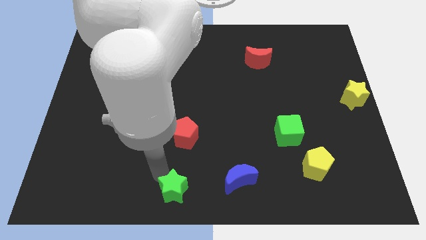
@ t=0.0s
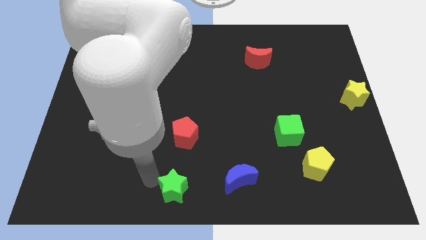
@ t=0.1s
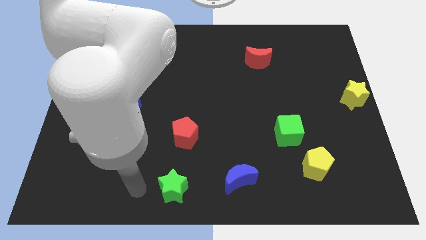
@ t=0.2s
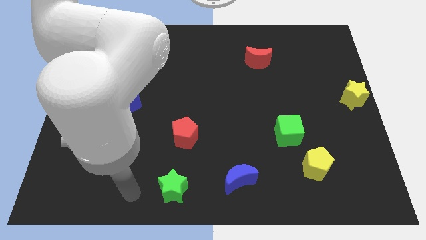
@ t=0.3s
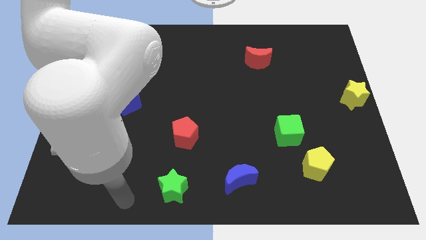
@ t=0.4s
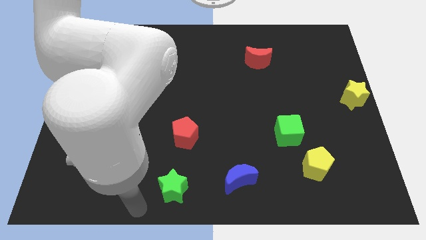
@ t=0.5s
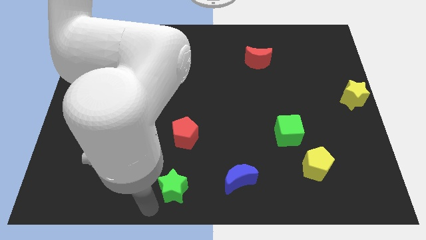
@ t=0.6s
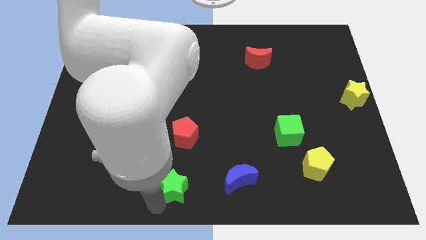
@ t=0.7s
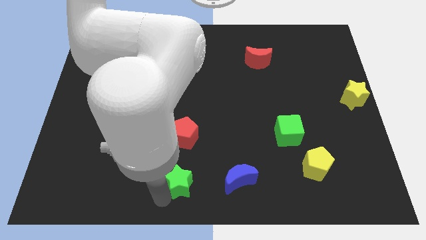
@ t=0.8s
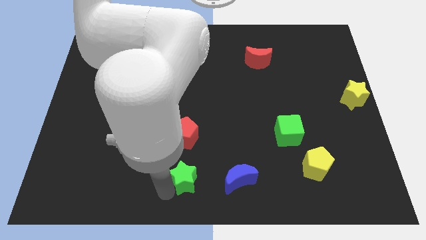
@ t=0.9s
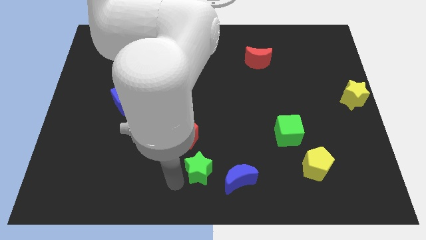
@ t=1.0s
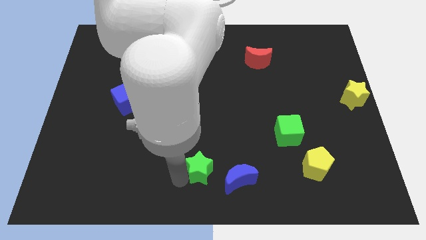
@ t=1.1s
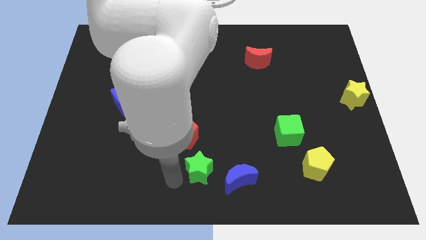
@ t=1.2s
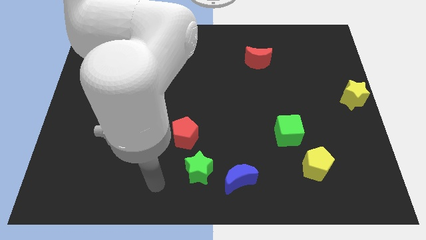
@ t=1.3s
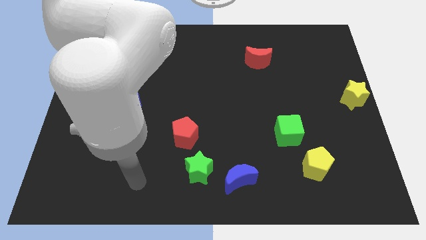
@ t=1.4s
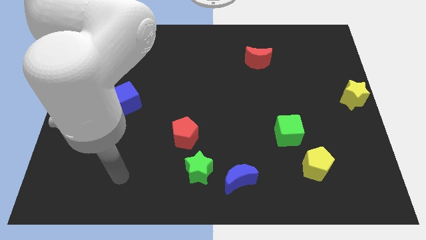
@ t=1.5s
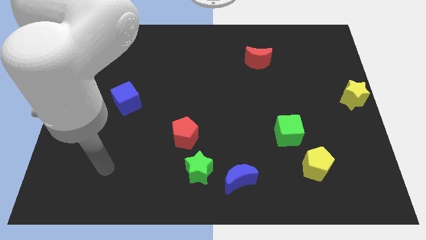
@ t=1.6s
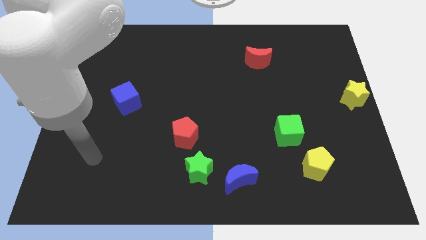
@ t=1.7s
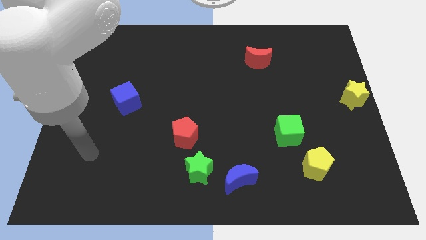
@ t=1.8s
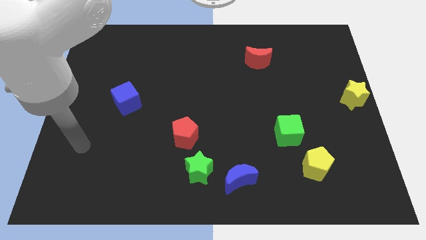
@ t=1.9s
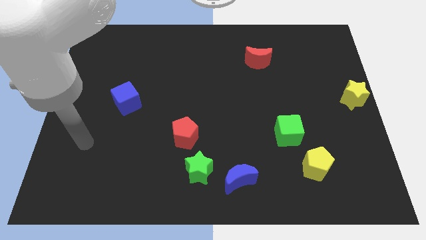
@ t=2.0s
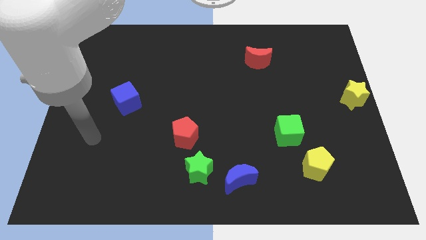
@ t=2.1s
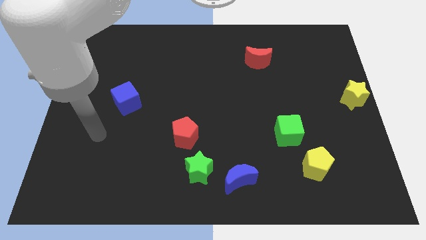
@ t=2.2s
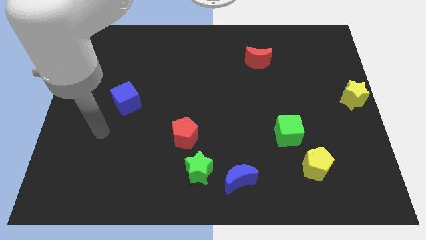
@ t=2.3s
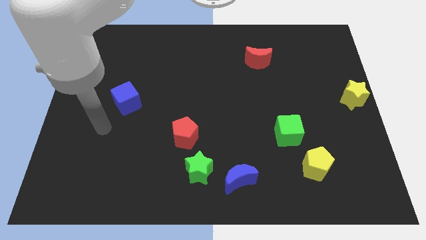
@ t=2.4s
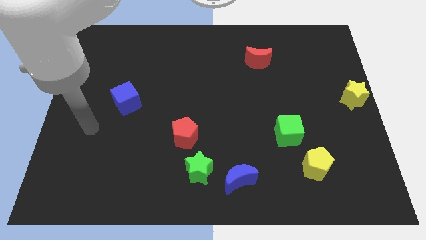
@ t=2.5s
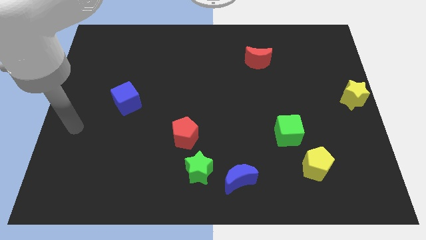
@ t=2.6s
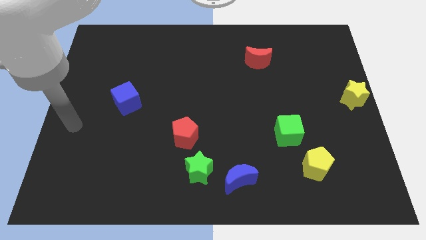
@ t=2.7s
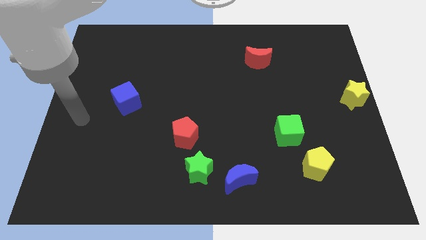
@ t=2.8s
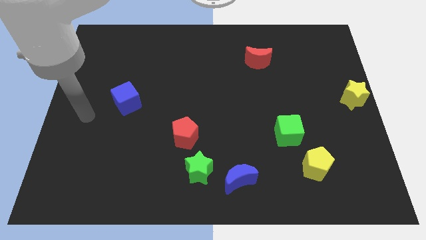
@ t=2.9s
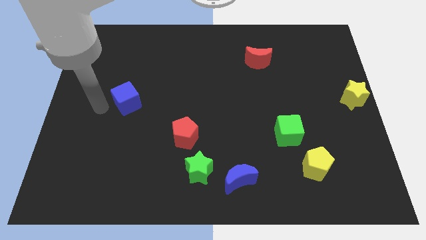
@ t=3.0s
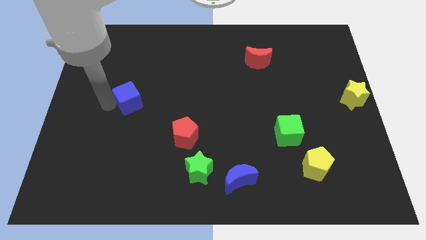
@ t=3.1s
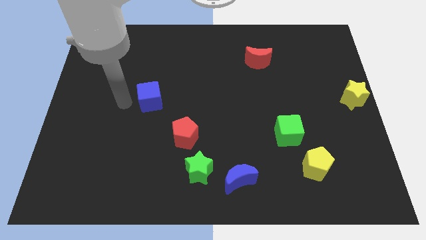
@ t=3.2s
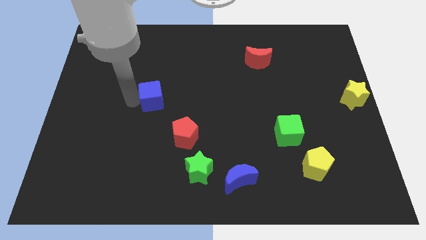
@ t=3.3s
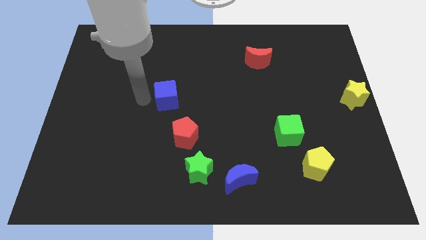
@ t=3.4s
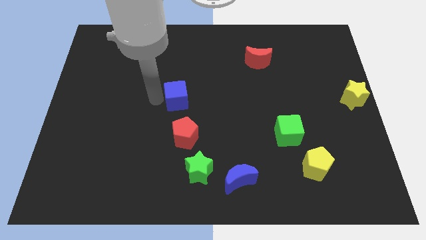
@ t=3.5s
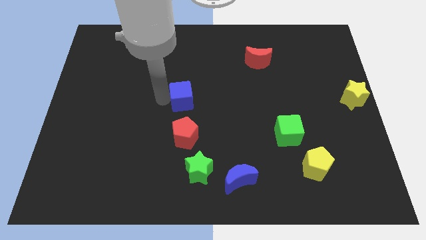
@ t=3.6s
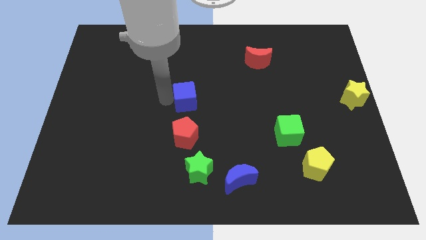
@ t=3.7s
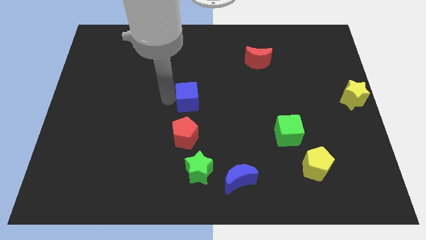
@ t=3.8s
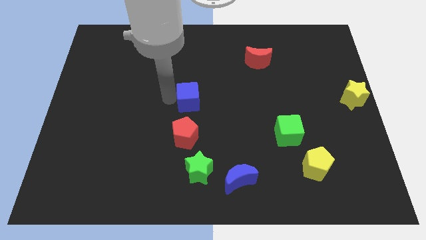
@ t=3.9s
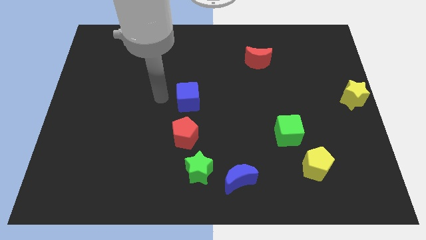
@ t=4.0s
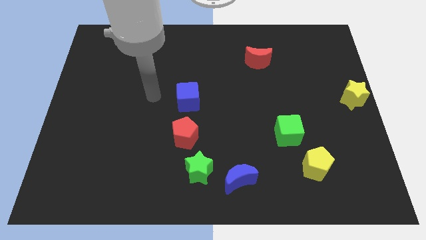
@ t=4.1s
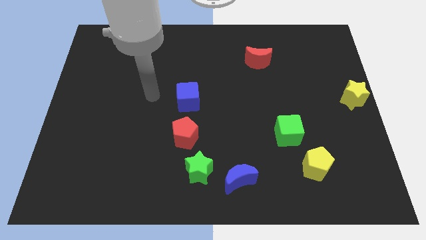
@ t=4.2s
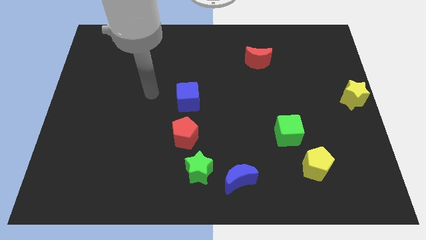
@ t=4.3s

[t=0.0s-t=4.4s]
move blue cube above red pentagon

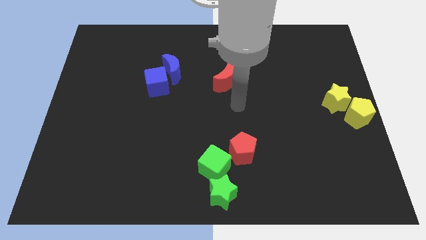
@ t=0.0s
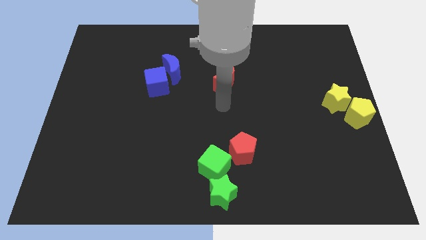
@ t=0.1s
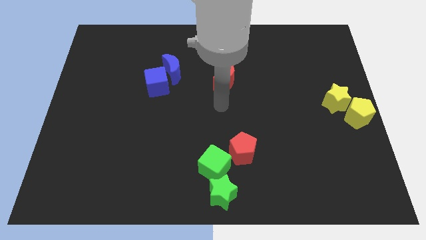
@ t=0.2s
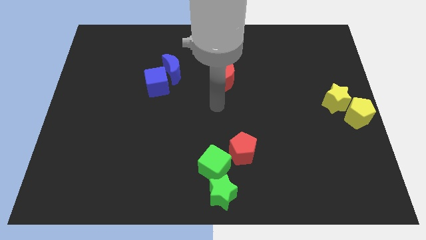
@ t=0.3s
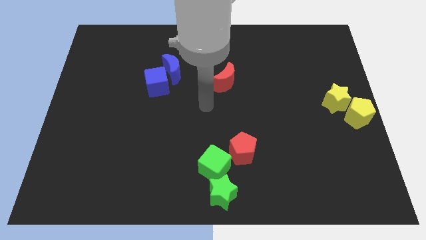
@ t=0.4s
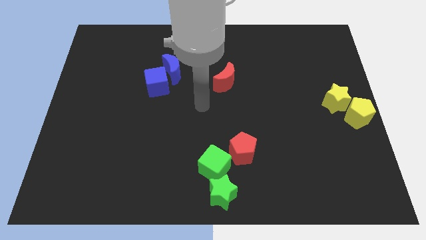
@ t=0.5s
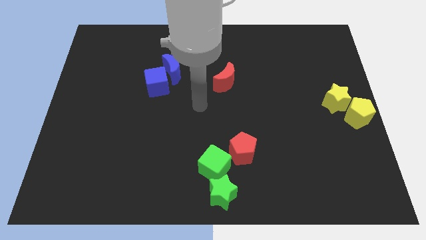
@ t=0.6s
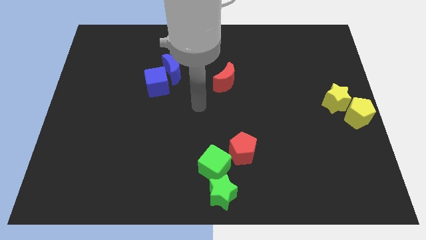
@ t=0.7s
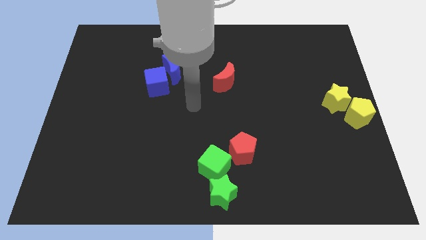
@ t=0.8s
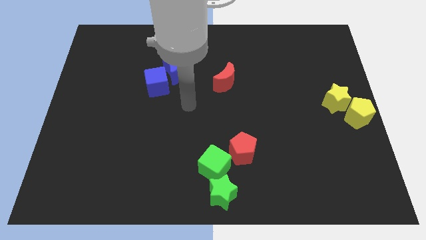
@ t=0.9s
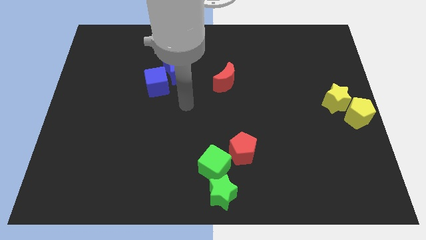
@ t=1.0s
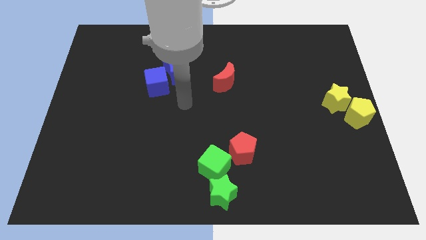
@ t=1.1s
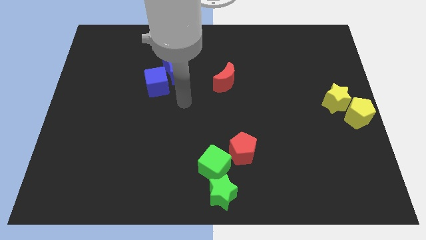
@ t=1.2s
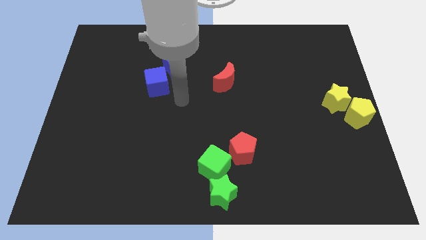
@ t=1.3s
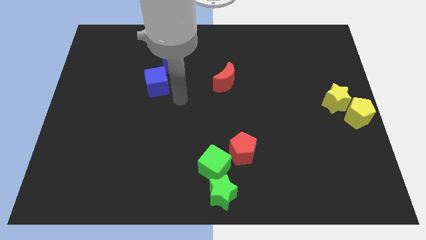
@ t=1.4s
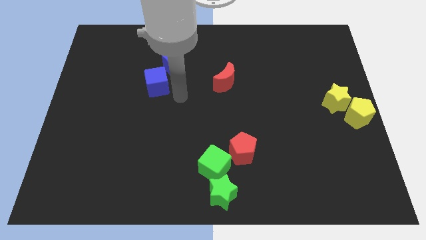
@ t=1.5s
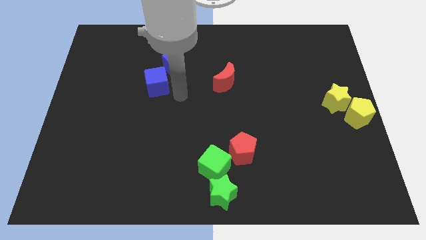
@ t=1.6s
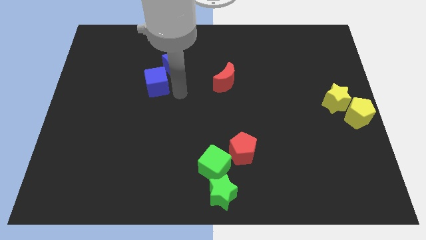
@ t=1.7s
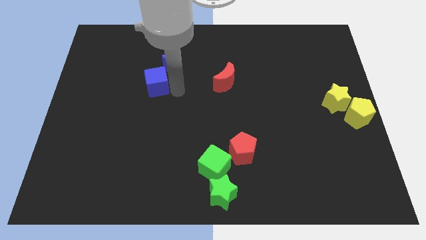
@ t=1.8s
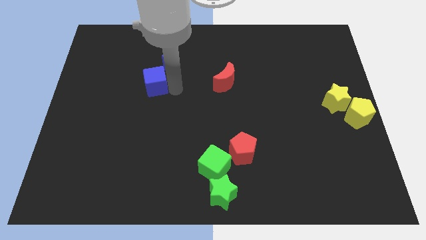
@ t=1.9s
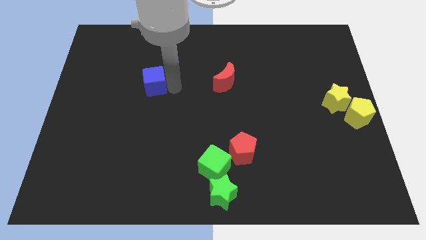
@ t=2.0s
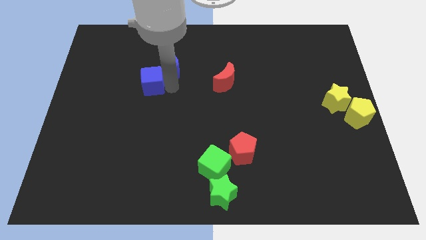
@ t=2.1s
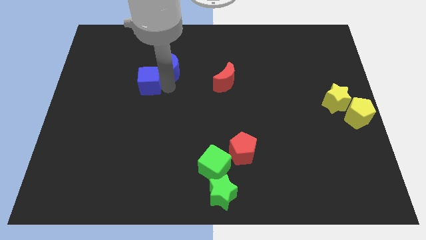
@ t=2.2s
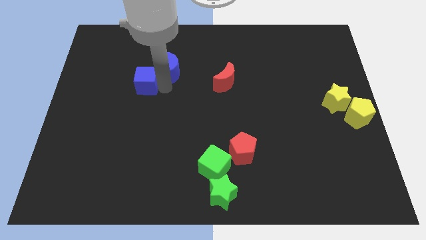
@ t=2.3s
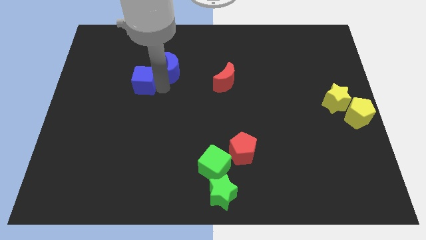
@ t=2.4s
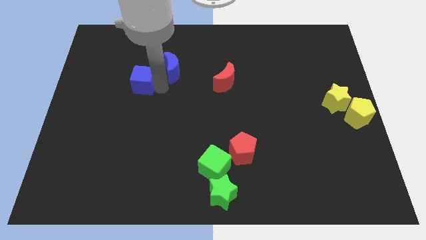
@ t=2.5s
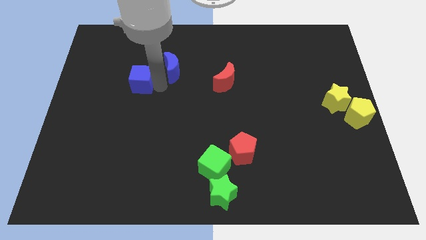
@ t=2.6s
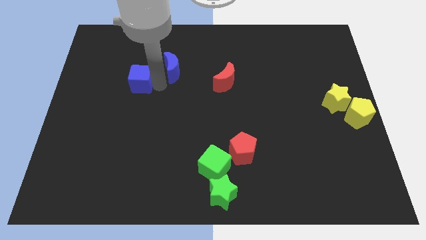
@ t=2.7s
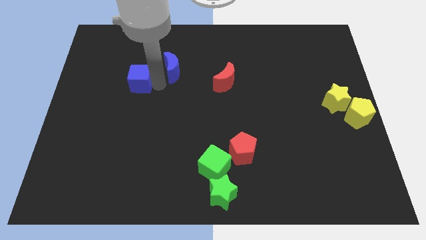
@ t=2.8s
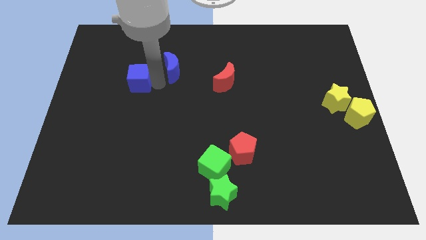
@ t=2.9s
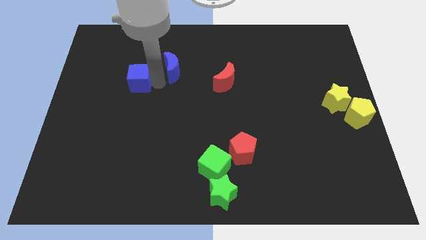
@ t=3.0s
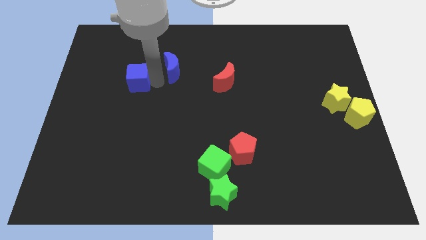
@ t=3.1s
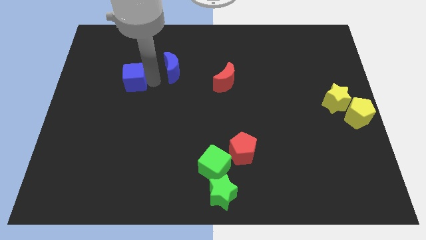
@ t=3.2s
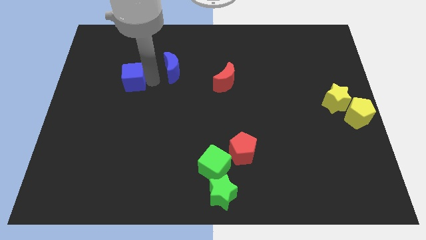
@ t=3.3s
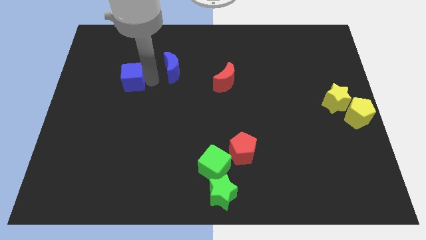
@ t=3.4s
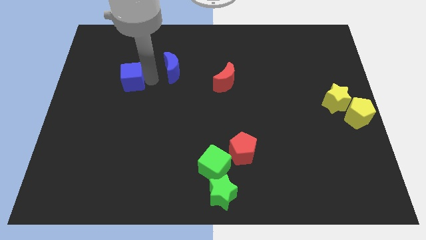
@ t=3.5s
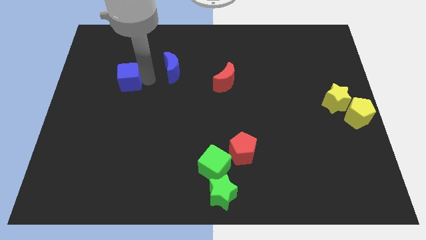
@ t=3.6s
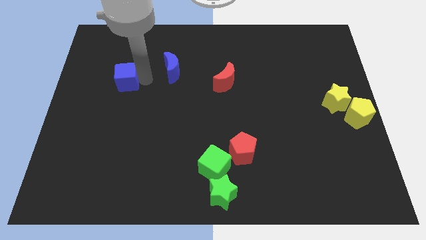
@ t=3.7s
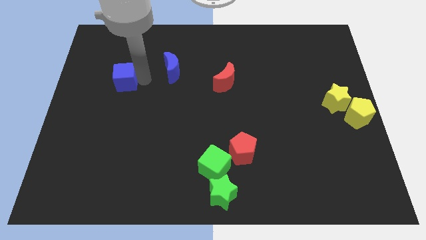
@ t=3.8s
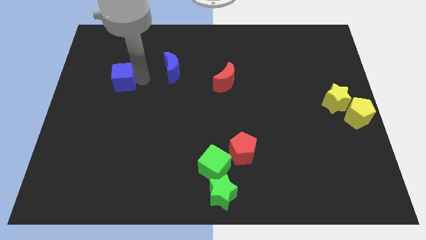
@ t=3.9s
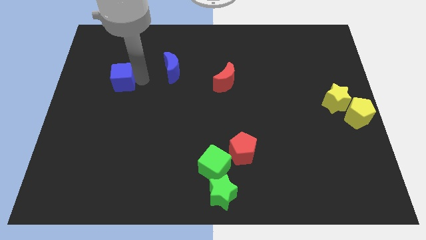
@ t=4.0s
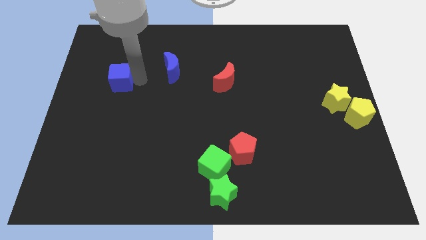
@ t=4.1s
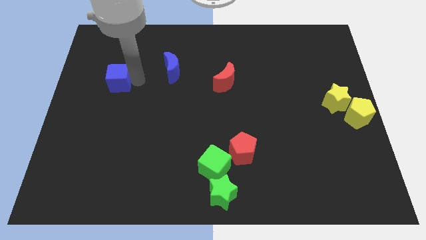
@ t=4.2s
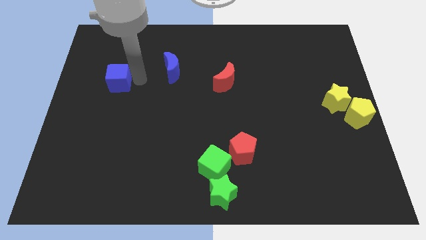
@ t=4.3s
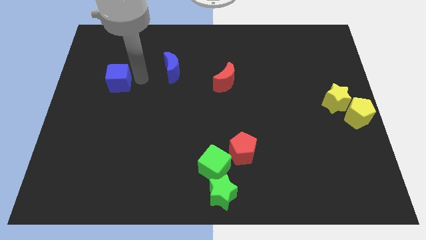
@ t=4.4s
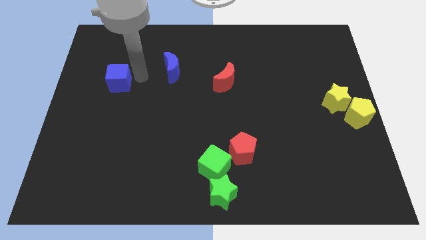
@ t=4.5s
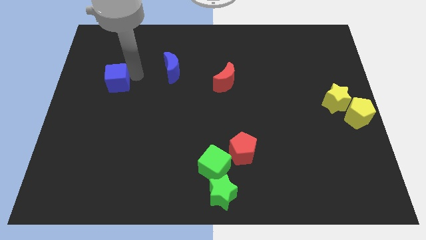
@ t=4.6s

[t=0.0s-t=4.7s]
separate the blue moon and blue cube
